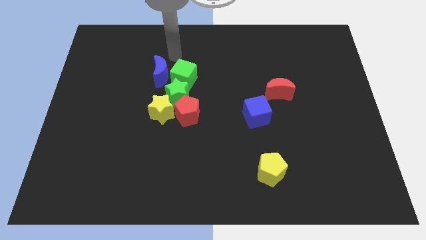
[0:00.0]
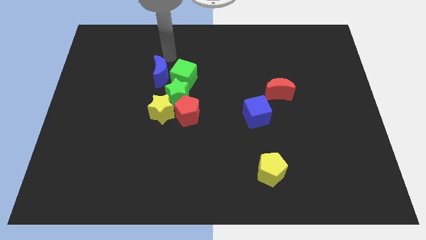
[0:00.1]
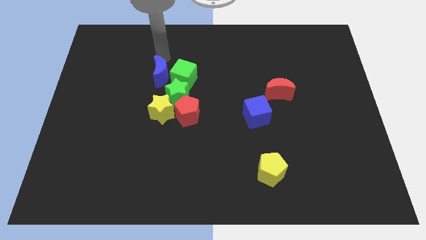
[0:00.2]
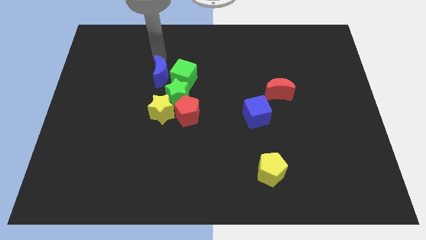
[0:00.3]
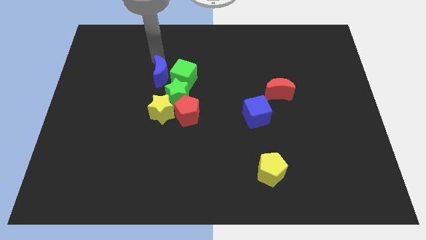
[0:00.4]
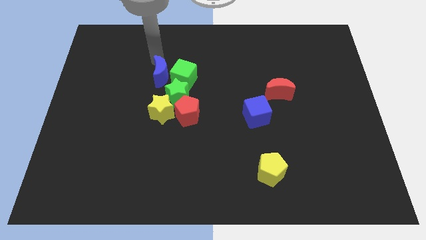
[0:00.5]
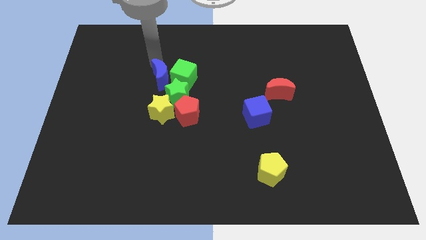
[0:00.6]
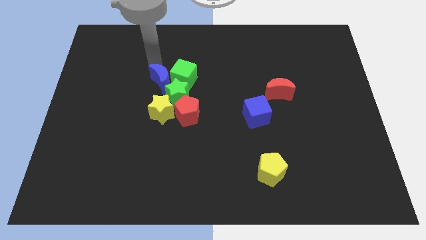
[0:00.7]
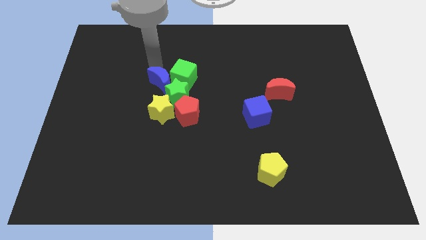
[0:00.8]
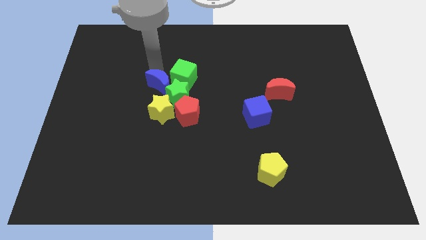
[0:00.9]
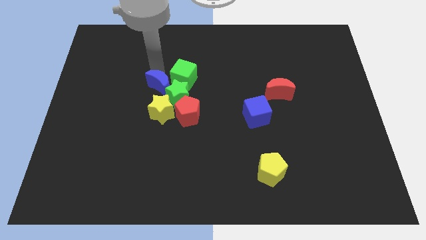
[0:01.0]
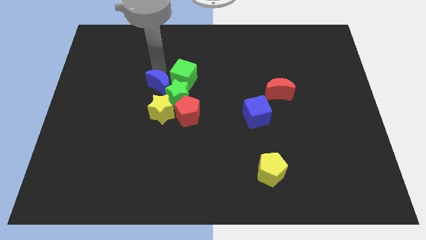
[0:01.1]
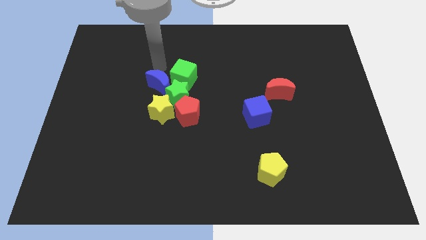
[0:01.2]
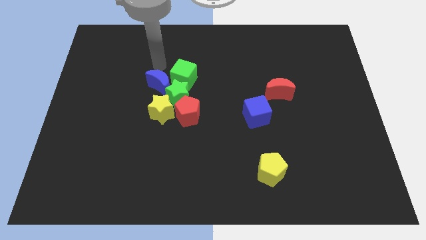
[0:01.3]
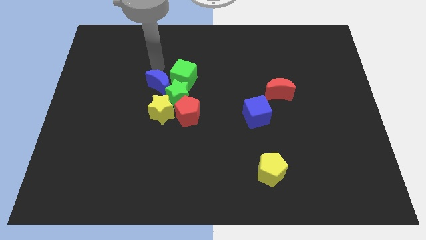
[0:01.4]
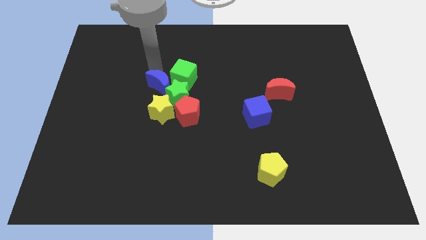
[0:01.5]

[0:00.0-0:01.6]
push blue moon into the green star

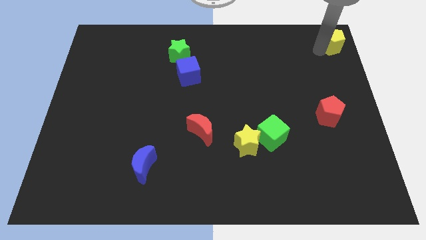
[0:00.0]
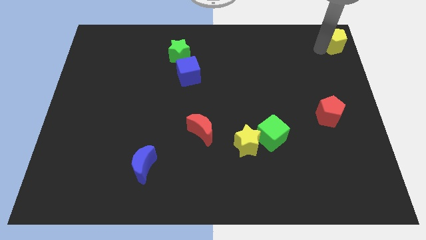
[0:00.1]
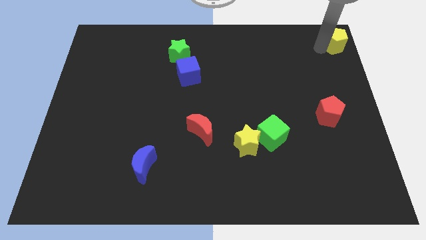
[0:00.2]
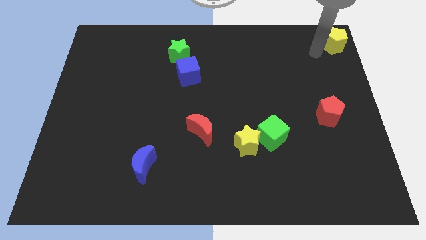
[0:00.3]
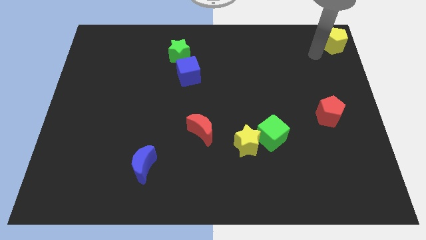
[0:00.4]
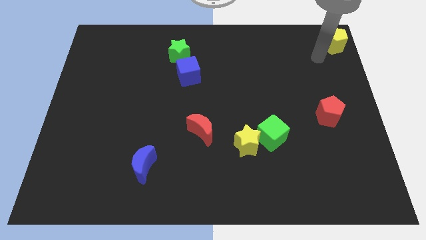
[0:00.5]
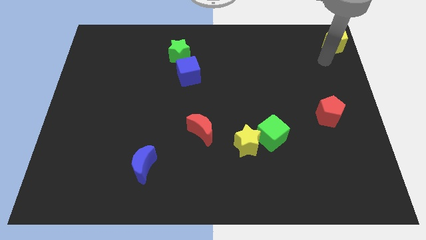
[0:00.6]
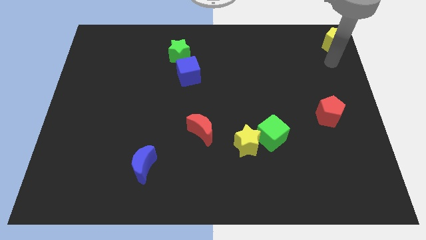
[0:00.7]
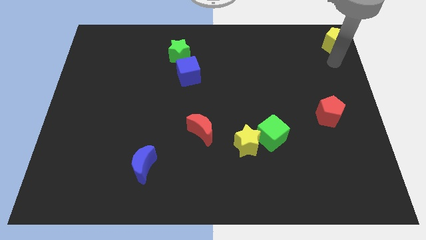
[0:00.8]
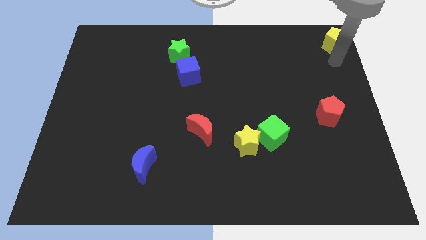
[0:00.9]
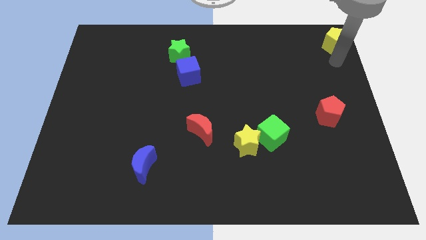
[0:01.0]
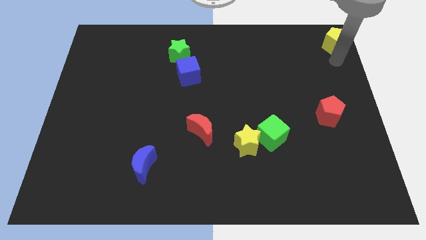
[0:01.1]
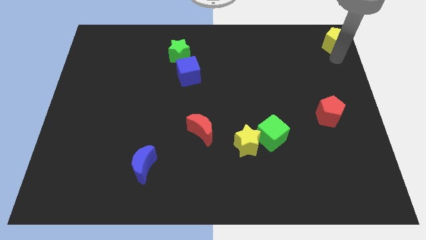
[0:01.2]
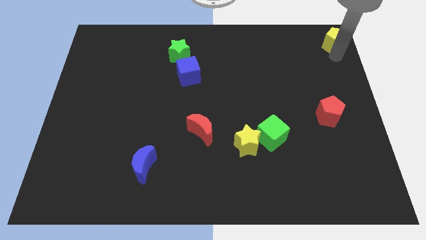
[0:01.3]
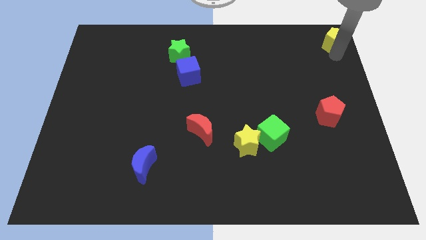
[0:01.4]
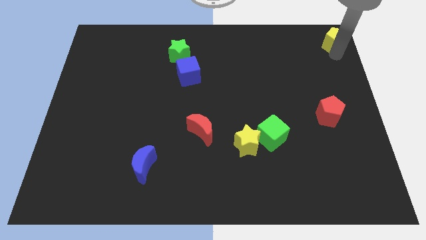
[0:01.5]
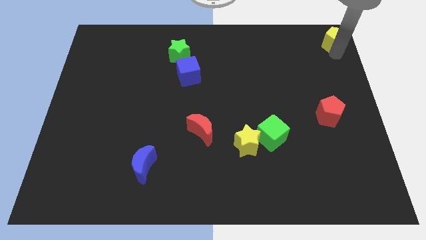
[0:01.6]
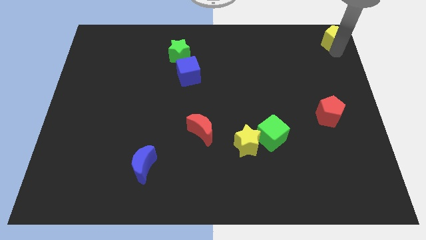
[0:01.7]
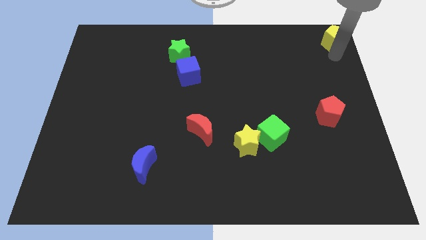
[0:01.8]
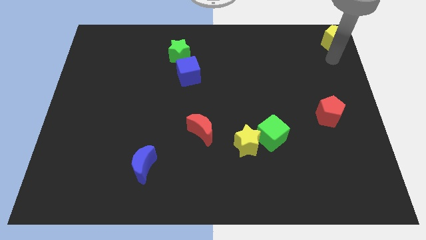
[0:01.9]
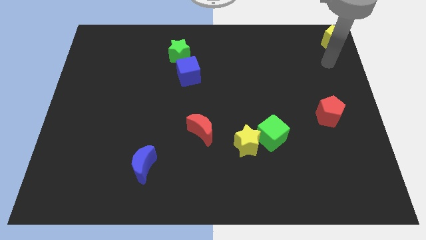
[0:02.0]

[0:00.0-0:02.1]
push the yellow pentagon diagonally above the red pentagon

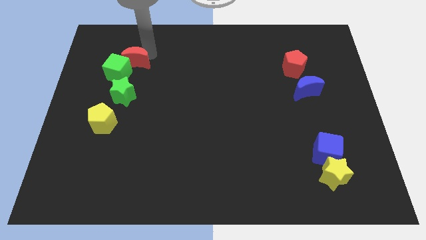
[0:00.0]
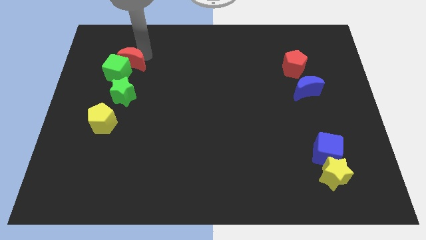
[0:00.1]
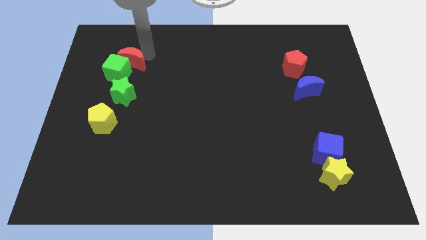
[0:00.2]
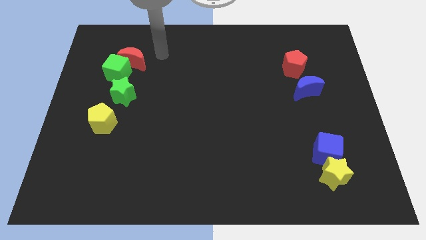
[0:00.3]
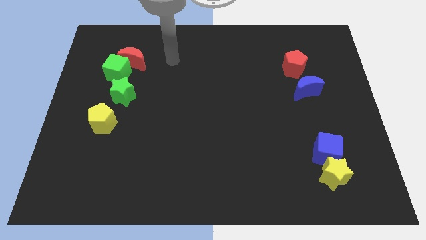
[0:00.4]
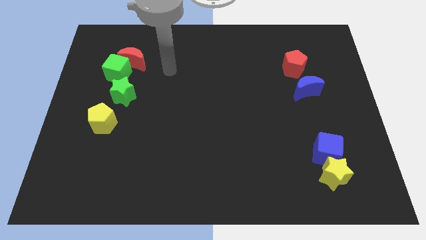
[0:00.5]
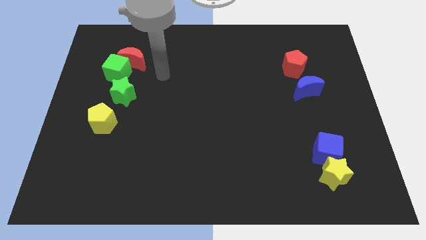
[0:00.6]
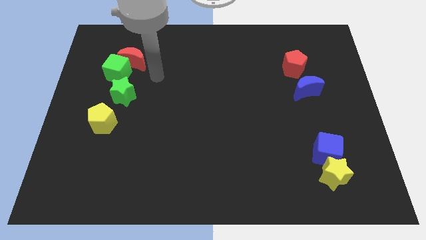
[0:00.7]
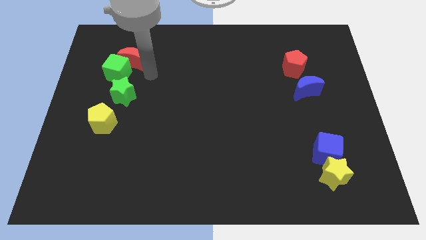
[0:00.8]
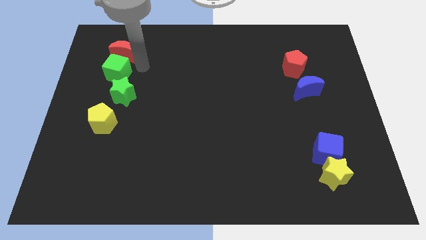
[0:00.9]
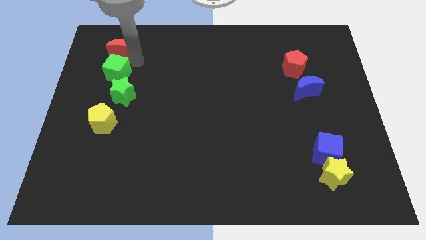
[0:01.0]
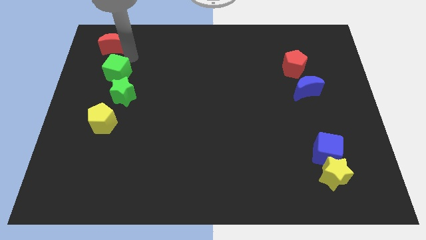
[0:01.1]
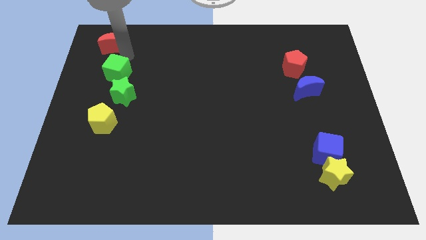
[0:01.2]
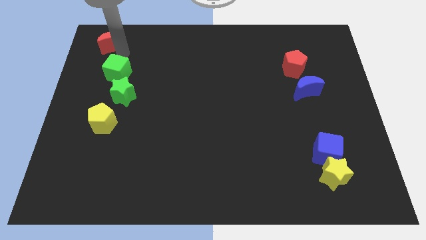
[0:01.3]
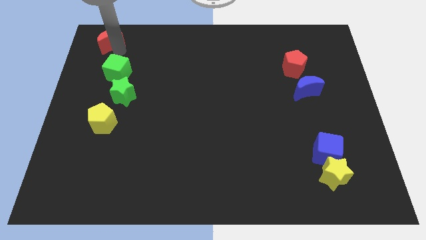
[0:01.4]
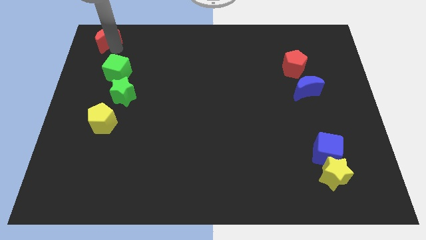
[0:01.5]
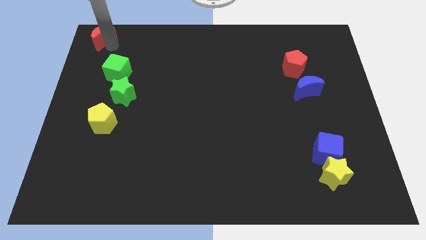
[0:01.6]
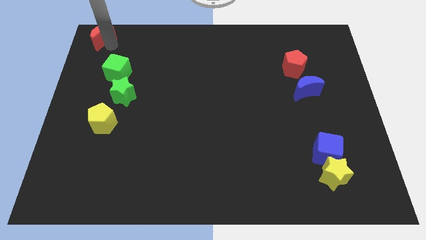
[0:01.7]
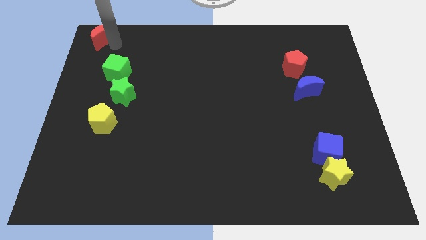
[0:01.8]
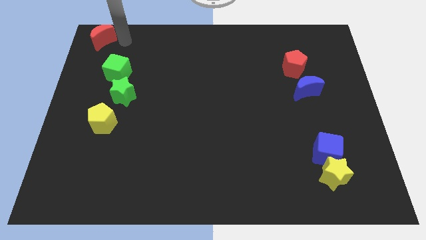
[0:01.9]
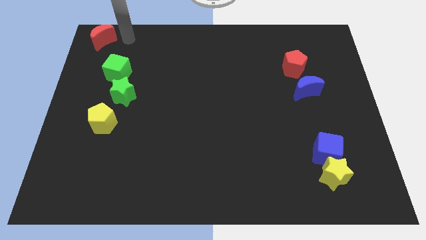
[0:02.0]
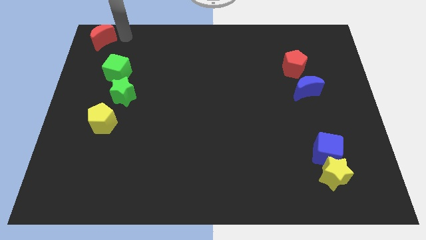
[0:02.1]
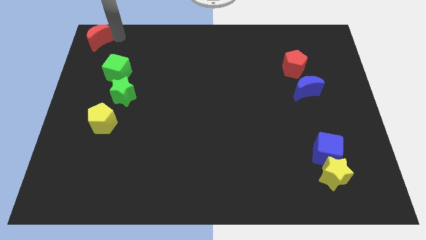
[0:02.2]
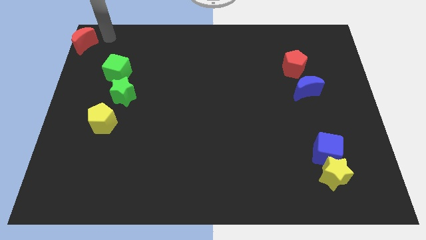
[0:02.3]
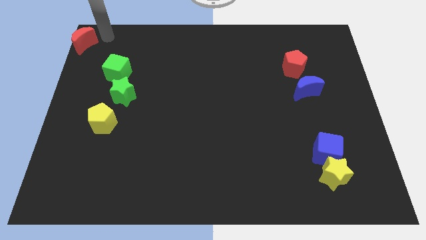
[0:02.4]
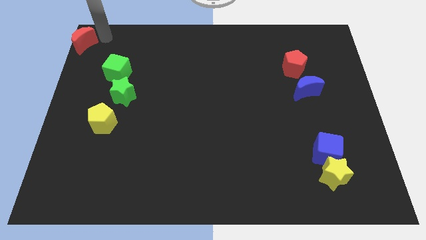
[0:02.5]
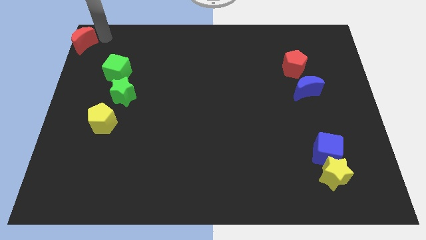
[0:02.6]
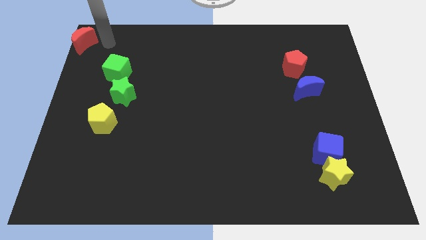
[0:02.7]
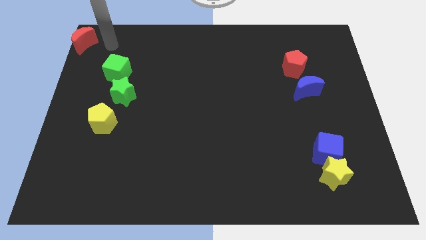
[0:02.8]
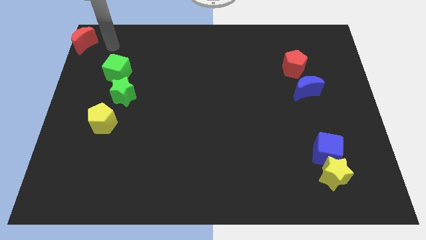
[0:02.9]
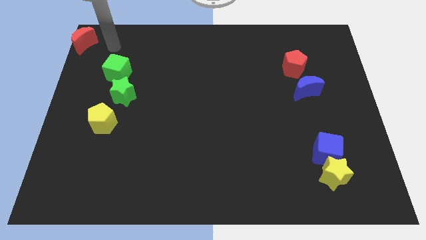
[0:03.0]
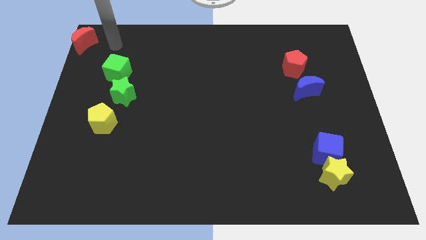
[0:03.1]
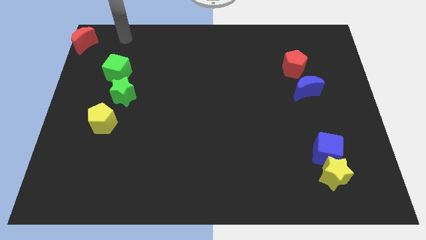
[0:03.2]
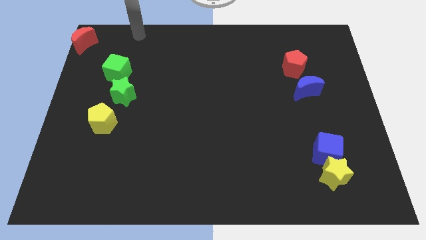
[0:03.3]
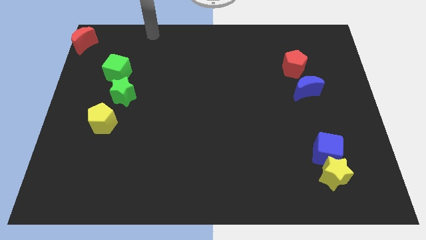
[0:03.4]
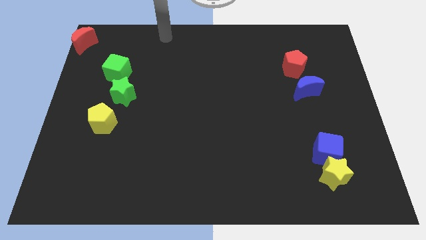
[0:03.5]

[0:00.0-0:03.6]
push the red moon to the top left corner

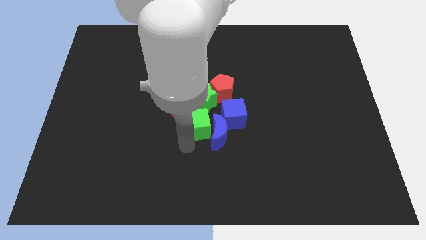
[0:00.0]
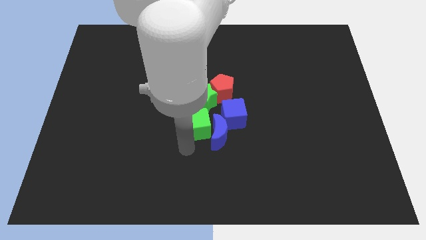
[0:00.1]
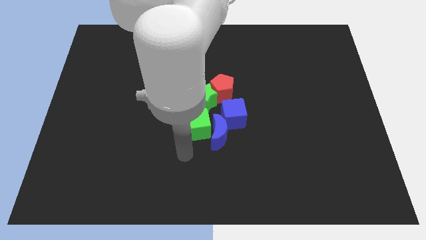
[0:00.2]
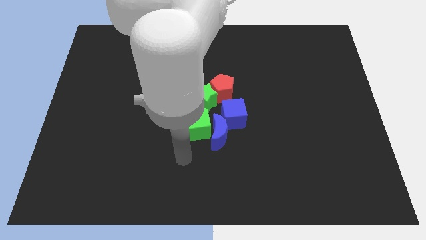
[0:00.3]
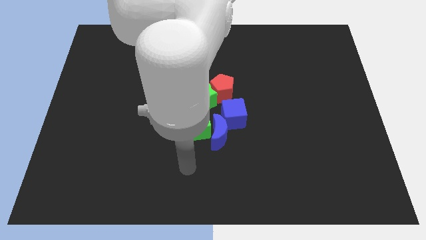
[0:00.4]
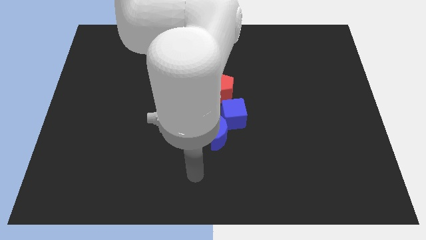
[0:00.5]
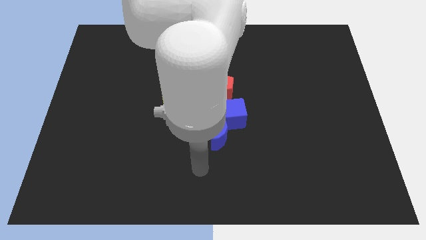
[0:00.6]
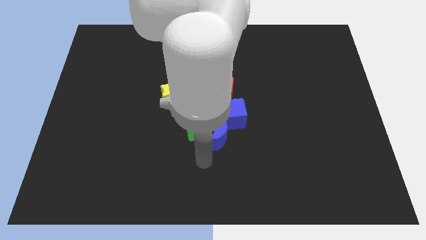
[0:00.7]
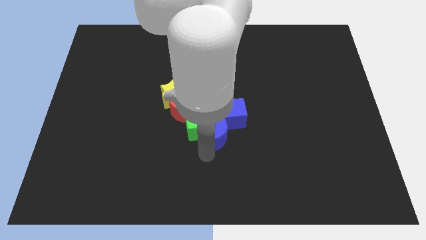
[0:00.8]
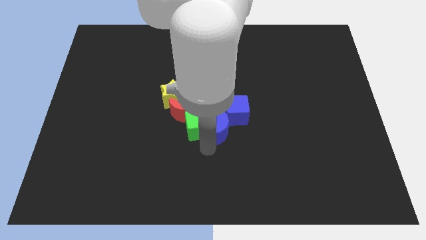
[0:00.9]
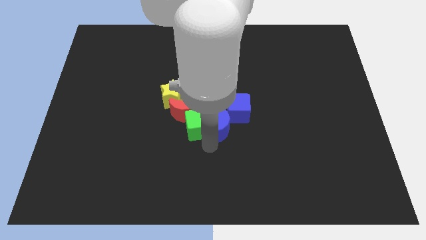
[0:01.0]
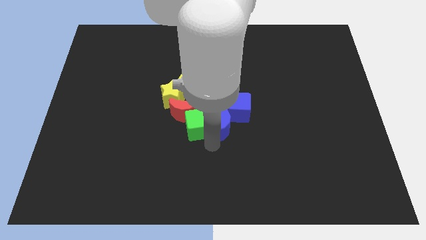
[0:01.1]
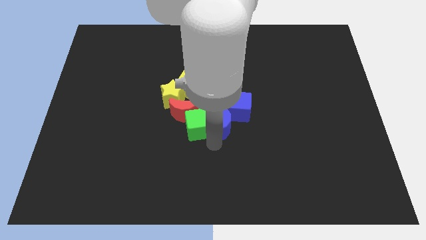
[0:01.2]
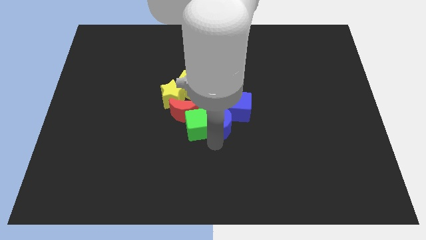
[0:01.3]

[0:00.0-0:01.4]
move your arm away from the green cube

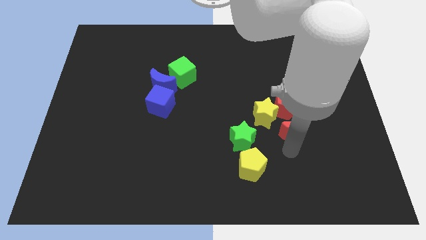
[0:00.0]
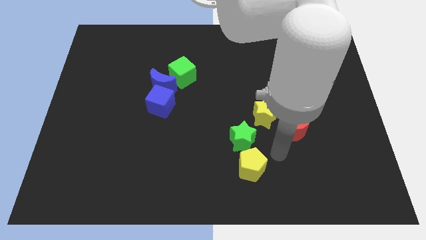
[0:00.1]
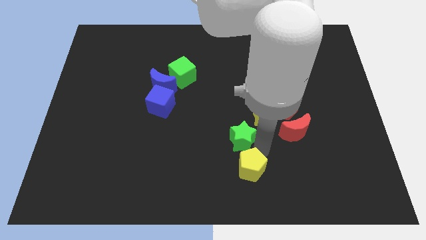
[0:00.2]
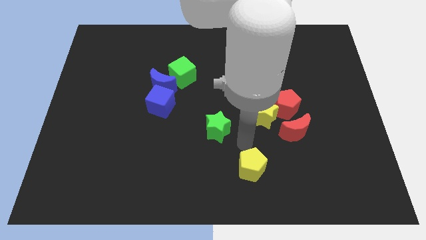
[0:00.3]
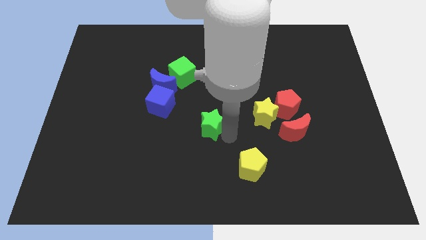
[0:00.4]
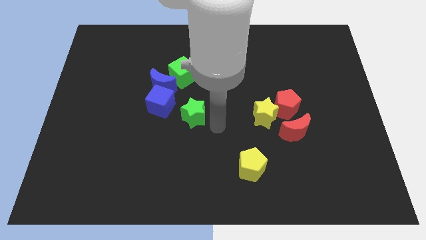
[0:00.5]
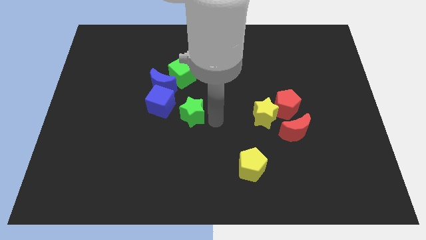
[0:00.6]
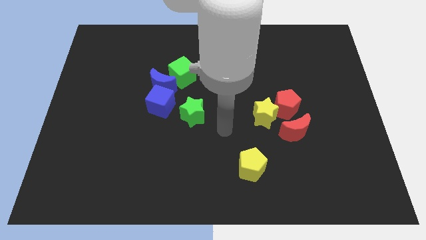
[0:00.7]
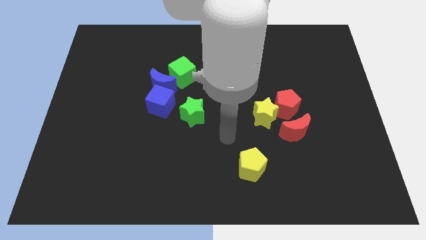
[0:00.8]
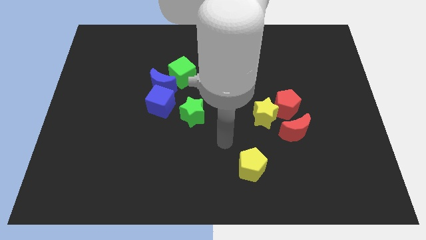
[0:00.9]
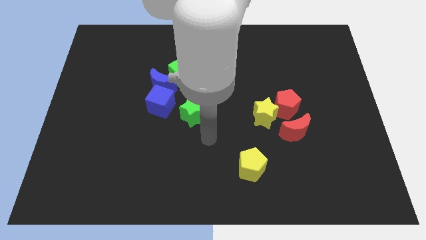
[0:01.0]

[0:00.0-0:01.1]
slide the green star slightly towards the blue cube
